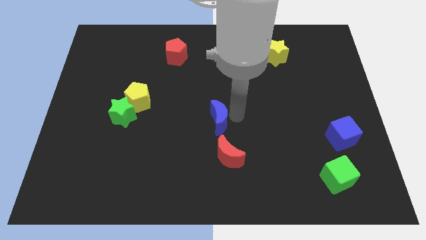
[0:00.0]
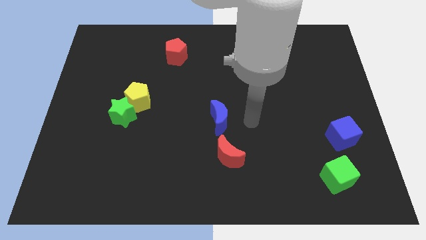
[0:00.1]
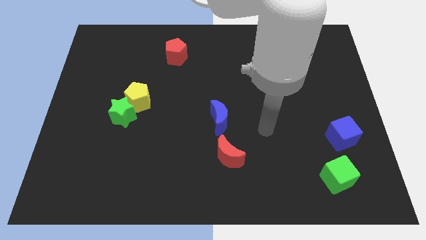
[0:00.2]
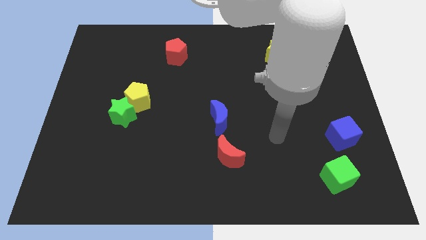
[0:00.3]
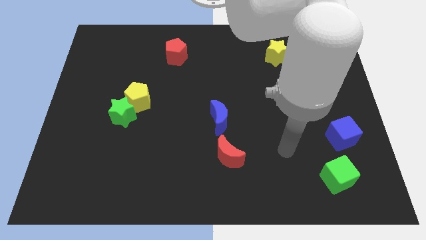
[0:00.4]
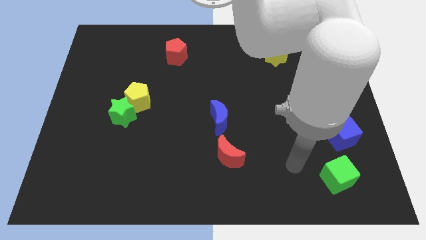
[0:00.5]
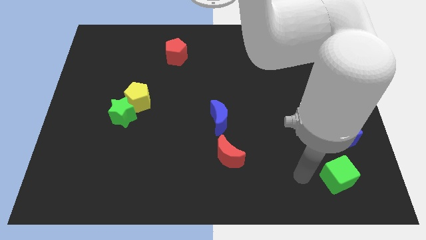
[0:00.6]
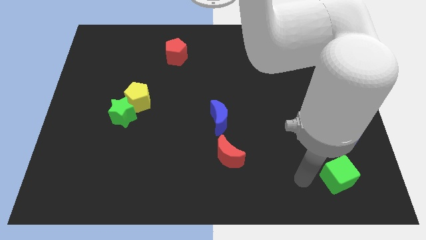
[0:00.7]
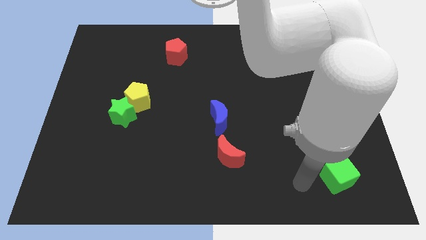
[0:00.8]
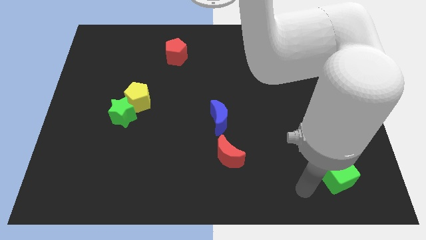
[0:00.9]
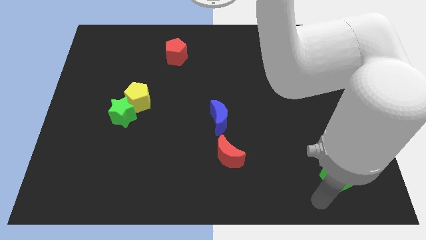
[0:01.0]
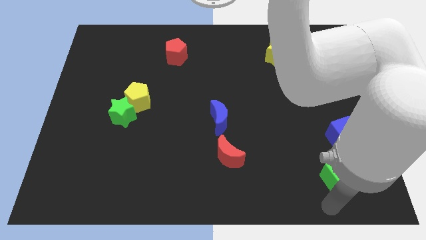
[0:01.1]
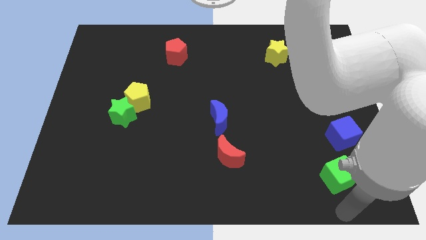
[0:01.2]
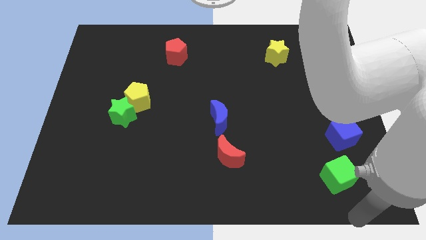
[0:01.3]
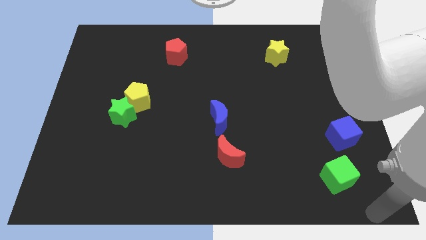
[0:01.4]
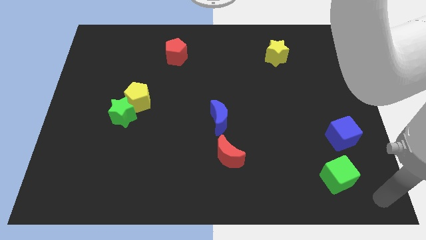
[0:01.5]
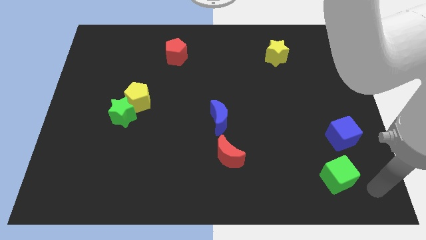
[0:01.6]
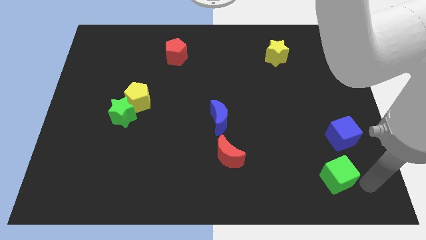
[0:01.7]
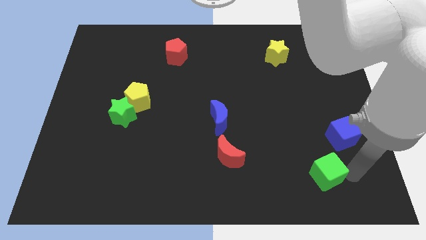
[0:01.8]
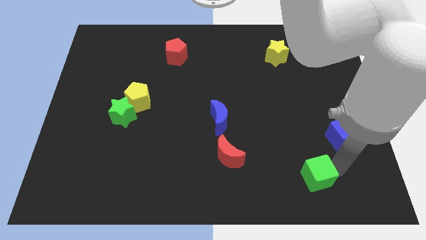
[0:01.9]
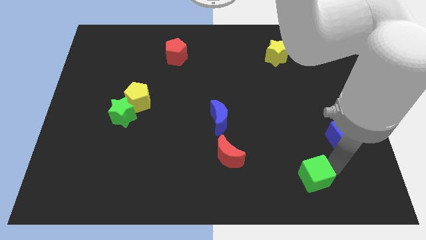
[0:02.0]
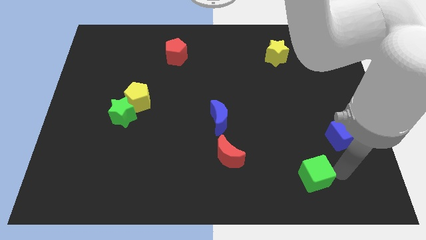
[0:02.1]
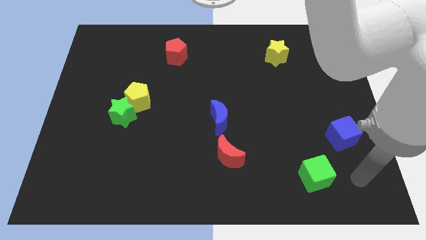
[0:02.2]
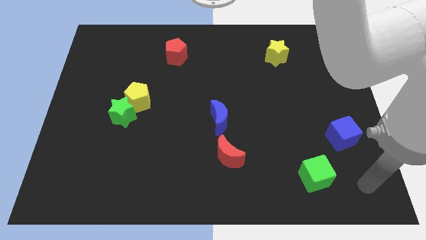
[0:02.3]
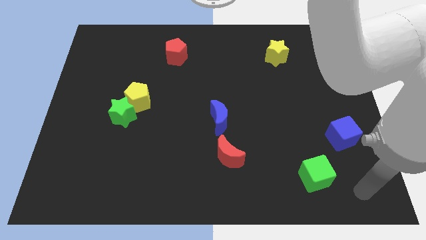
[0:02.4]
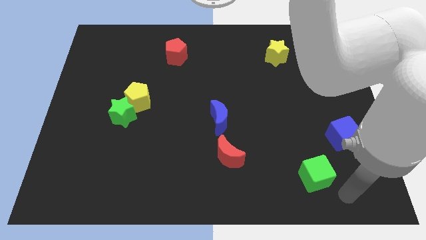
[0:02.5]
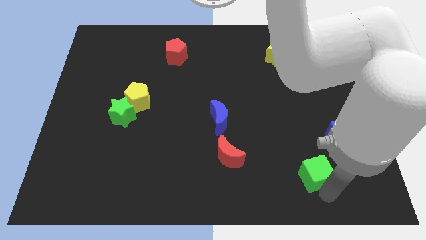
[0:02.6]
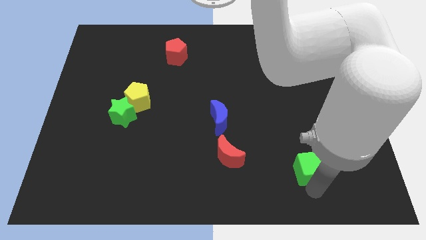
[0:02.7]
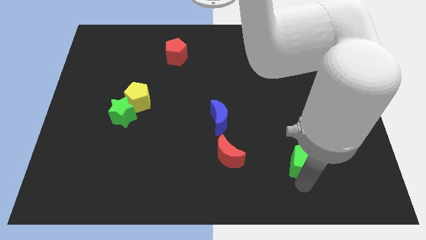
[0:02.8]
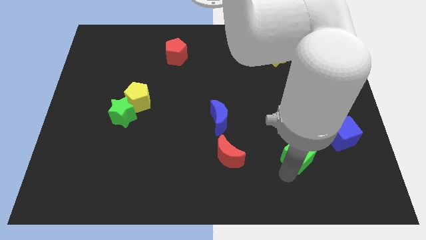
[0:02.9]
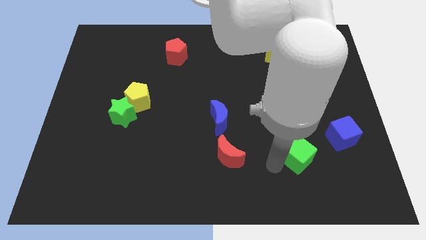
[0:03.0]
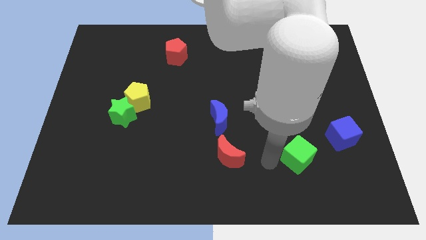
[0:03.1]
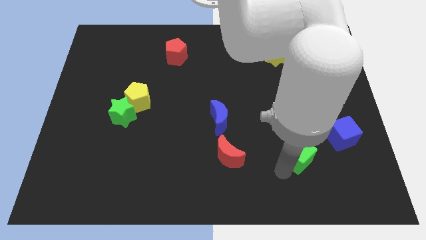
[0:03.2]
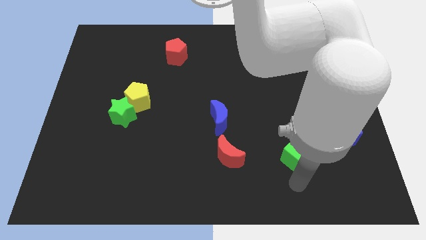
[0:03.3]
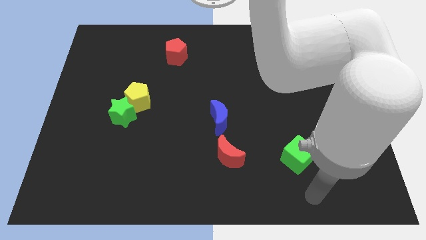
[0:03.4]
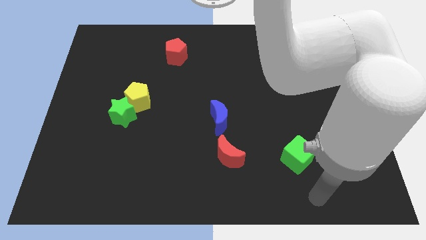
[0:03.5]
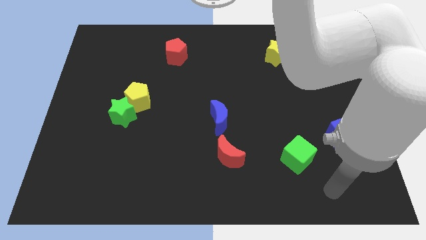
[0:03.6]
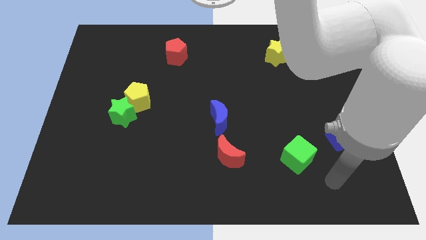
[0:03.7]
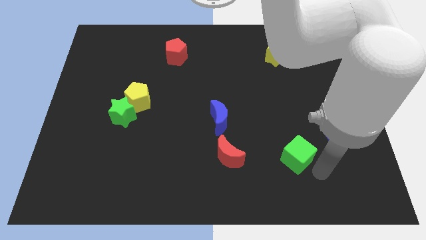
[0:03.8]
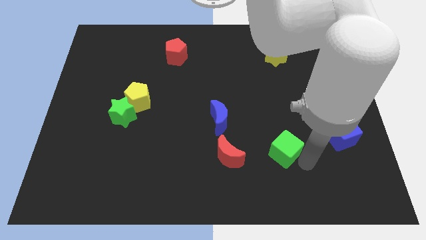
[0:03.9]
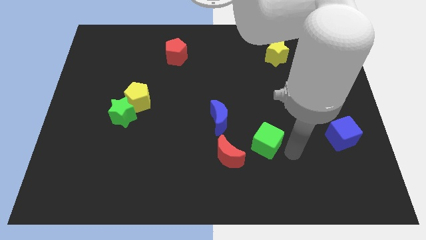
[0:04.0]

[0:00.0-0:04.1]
place the green cube in between the blue cube and red moon

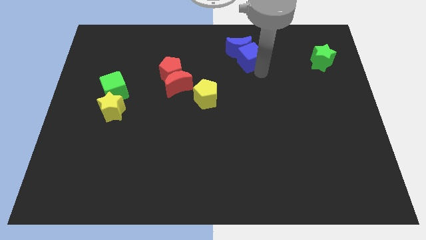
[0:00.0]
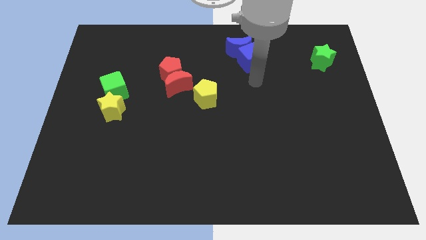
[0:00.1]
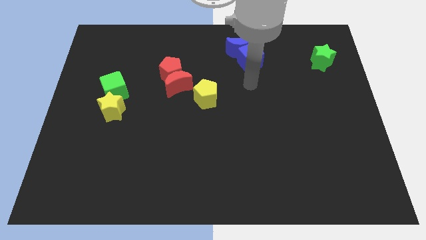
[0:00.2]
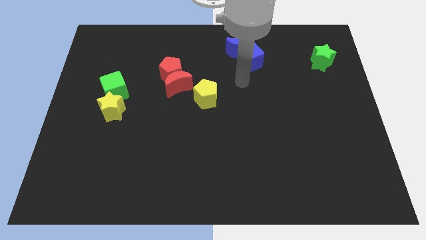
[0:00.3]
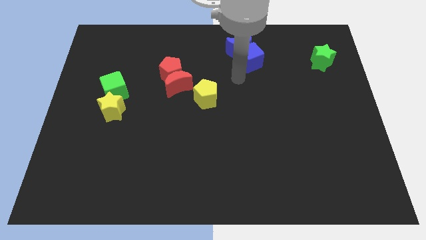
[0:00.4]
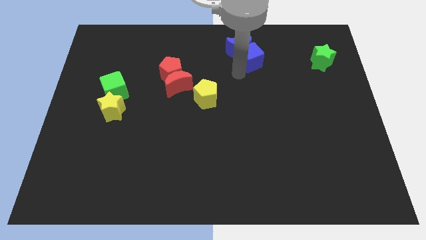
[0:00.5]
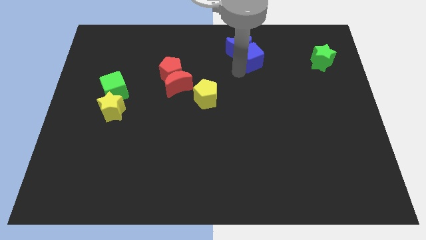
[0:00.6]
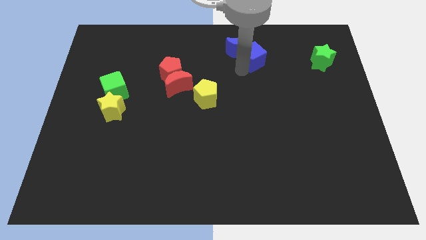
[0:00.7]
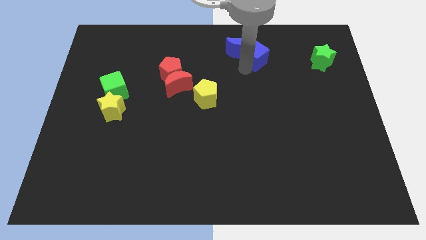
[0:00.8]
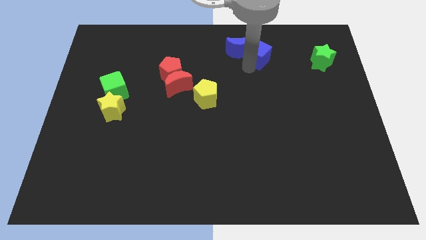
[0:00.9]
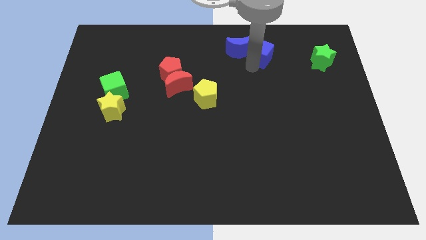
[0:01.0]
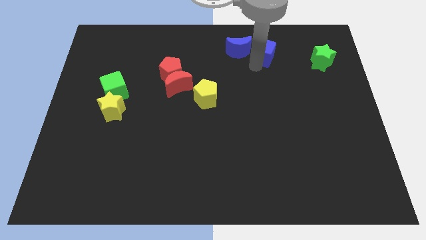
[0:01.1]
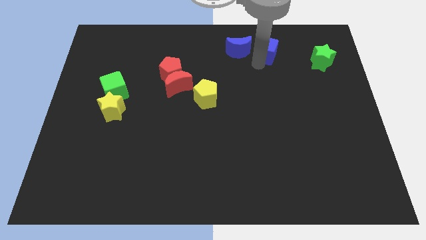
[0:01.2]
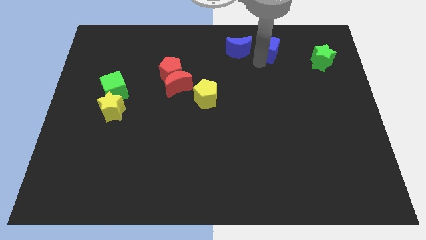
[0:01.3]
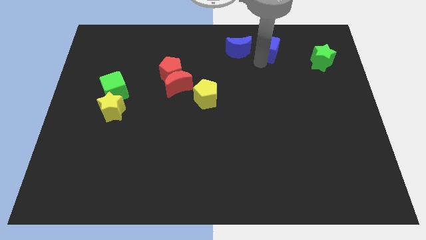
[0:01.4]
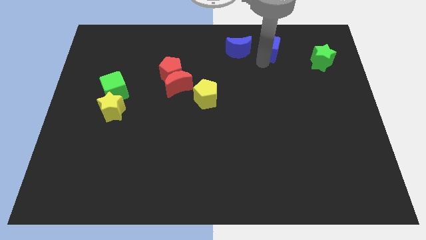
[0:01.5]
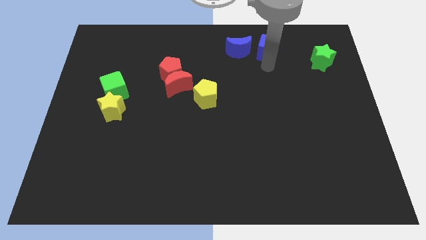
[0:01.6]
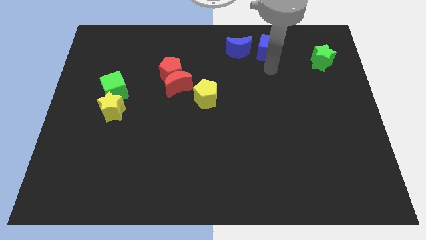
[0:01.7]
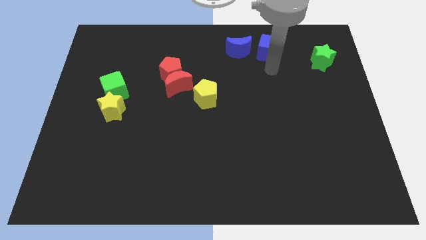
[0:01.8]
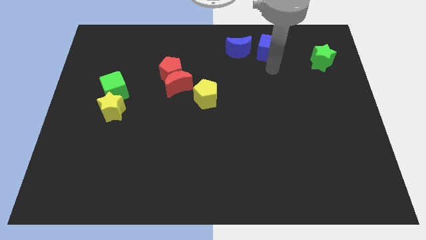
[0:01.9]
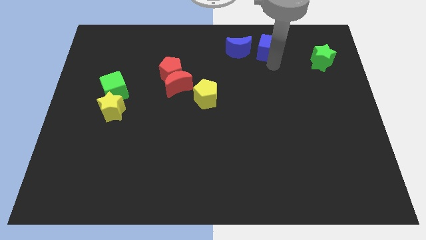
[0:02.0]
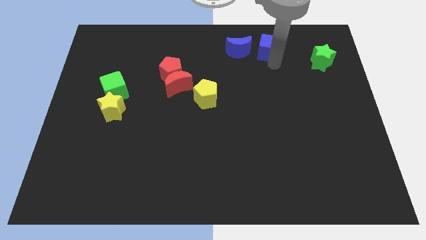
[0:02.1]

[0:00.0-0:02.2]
separate the blue cube from the blue moon

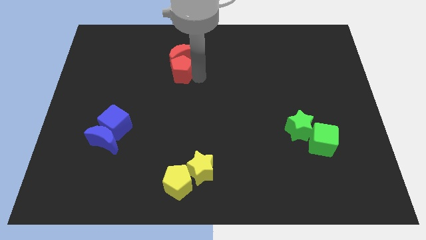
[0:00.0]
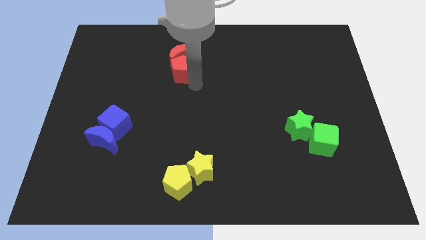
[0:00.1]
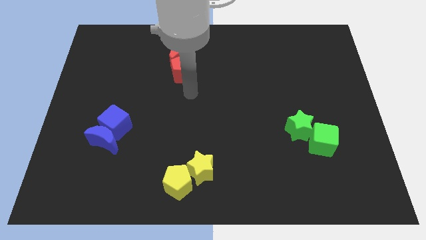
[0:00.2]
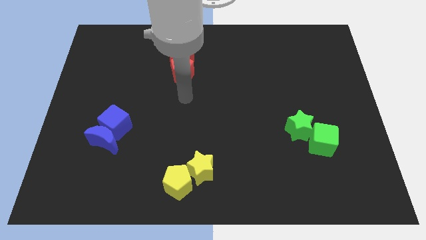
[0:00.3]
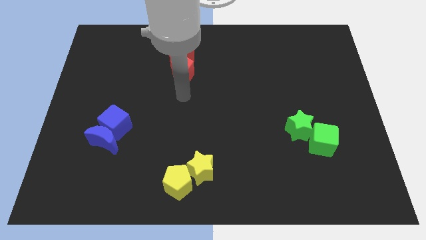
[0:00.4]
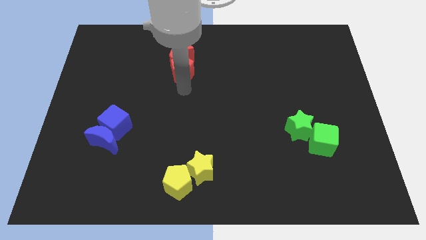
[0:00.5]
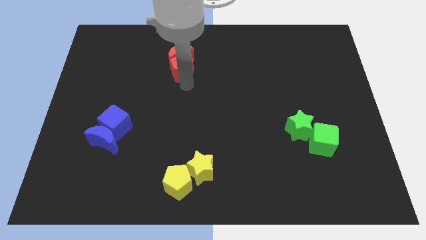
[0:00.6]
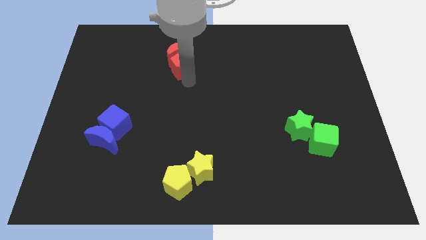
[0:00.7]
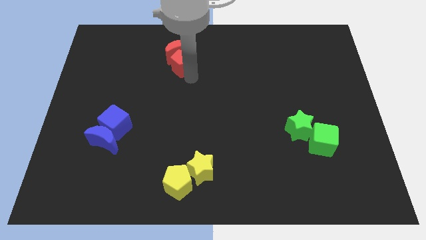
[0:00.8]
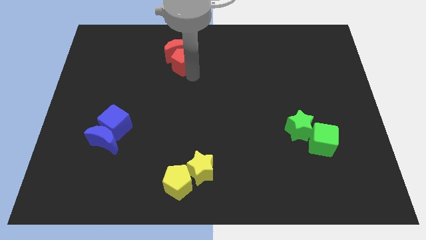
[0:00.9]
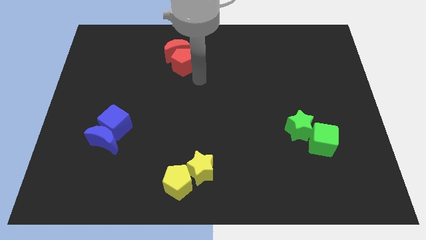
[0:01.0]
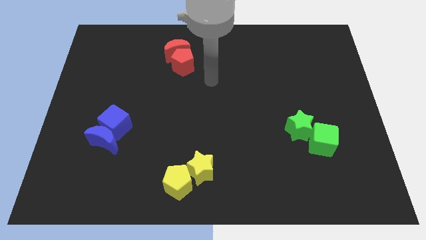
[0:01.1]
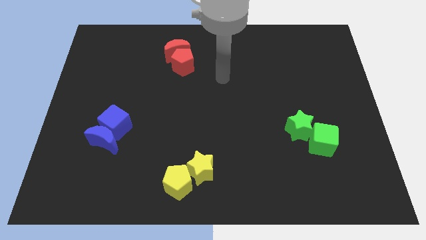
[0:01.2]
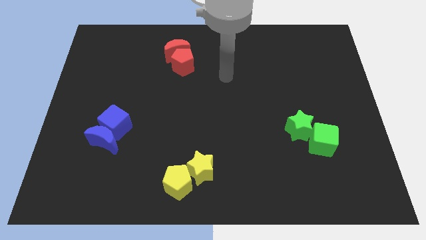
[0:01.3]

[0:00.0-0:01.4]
push the red blocks slightly upwards

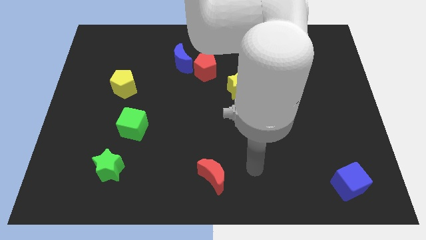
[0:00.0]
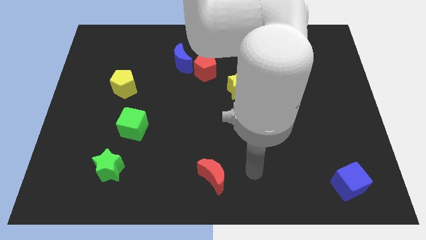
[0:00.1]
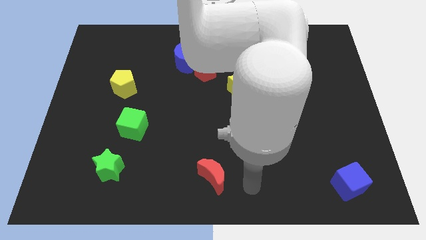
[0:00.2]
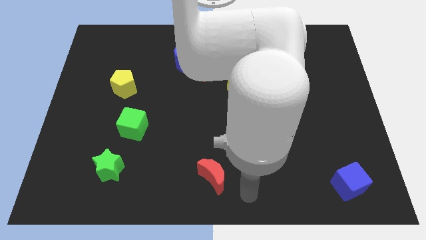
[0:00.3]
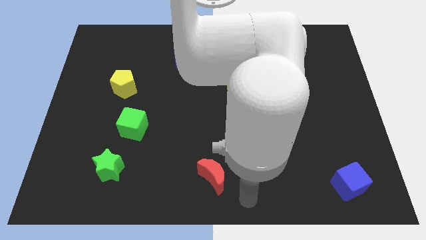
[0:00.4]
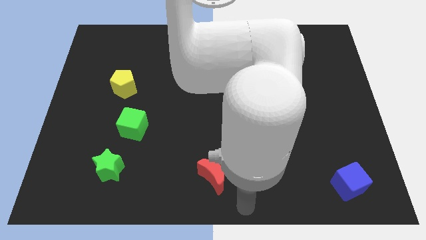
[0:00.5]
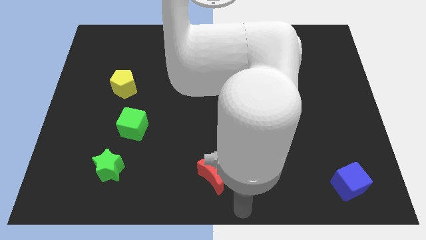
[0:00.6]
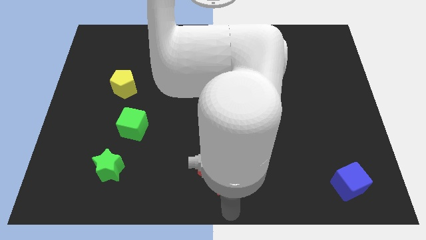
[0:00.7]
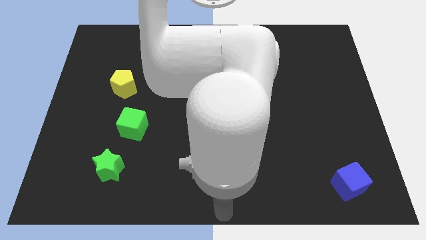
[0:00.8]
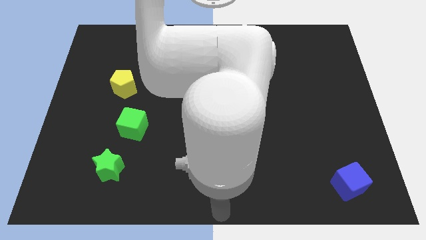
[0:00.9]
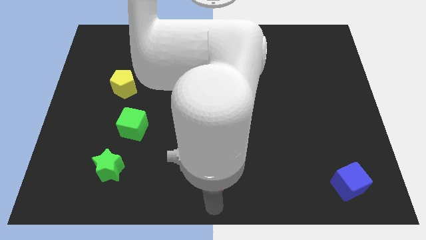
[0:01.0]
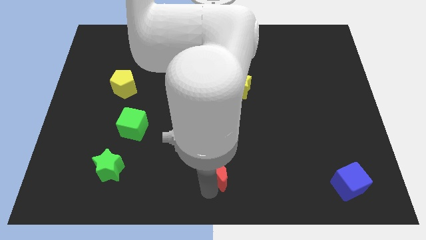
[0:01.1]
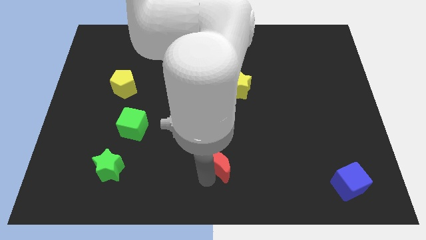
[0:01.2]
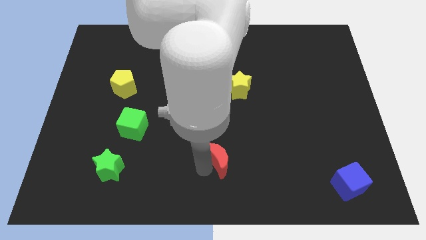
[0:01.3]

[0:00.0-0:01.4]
push the red crescent to the top of the board
